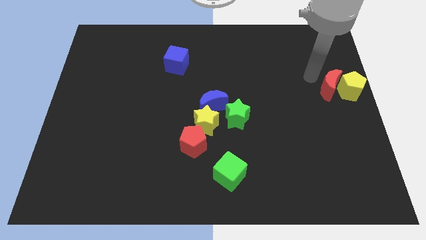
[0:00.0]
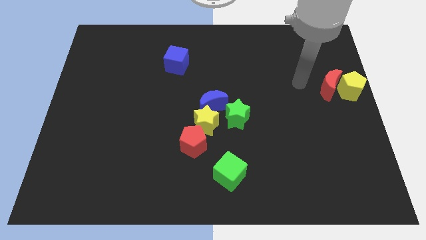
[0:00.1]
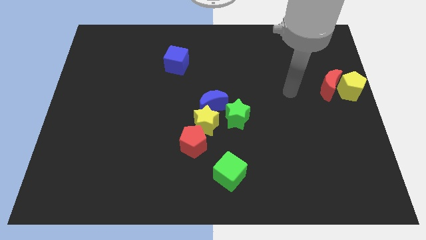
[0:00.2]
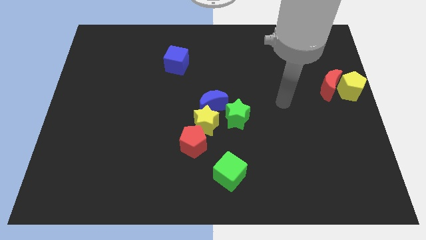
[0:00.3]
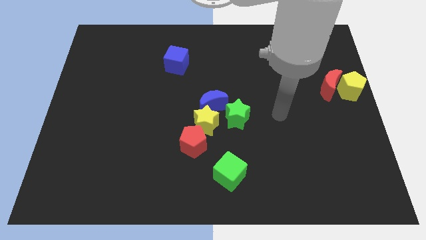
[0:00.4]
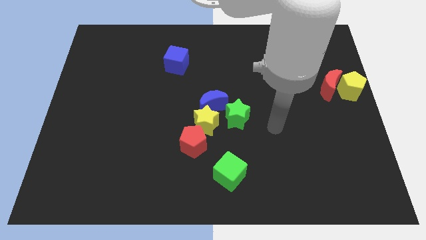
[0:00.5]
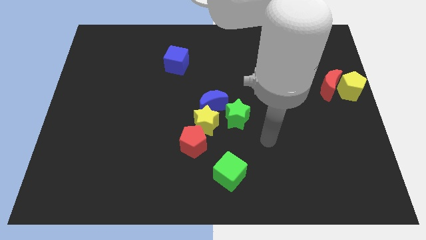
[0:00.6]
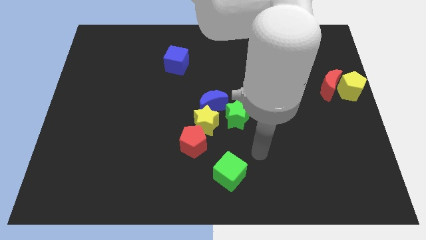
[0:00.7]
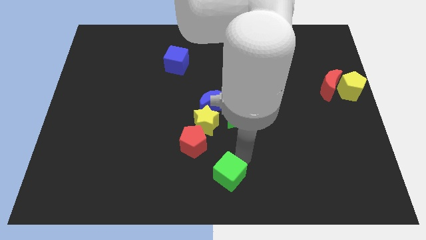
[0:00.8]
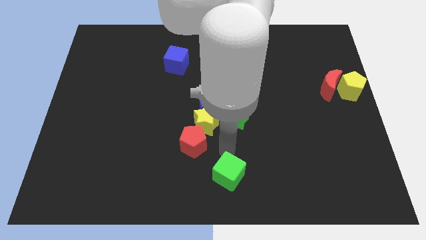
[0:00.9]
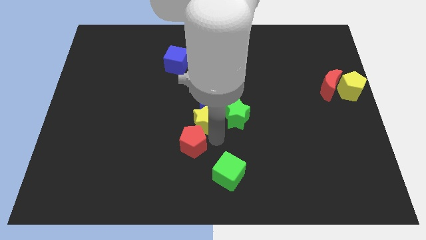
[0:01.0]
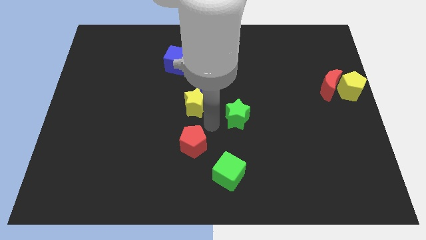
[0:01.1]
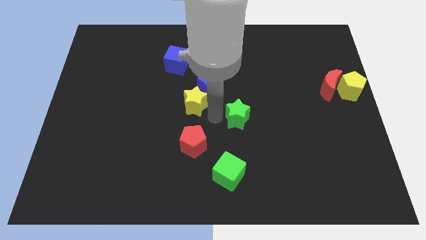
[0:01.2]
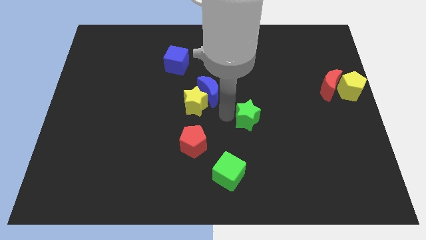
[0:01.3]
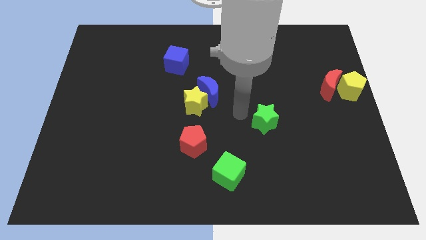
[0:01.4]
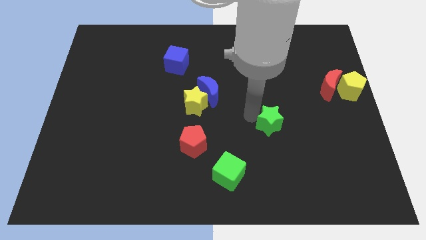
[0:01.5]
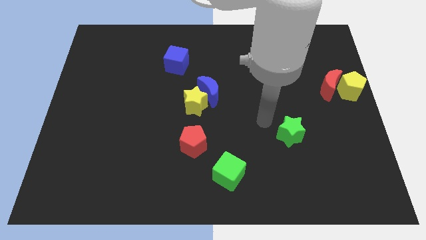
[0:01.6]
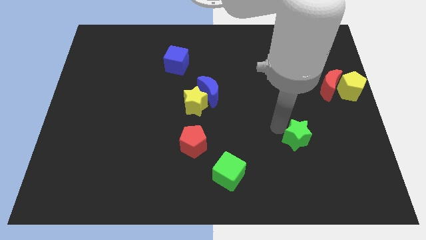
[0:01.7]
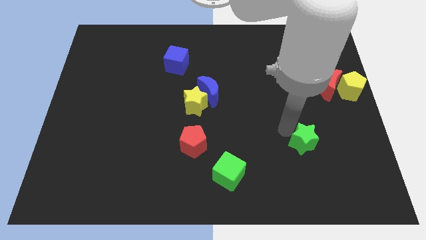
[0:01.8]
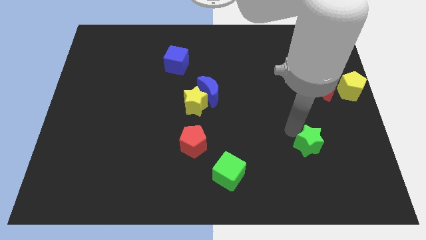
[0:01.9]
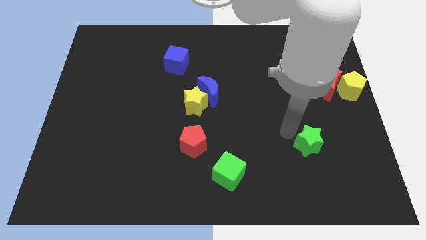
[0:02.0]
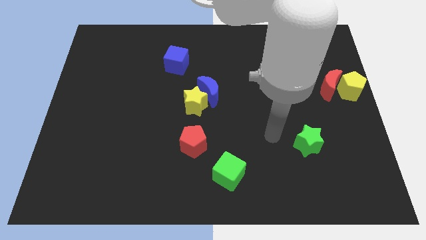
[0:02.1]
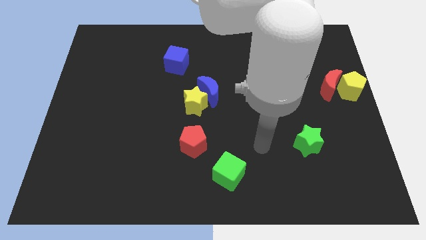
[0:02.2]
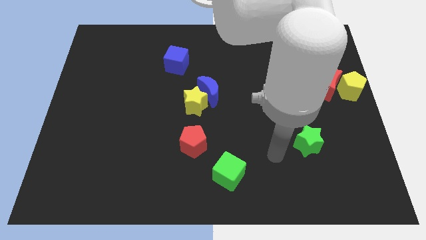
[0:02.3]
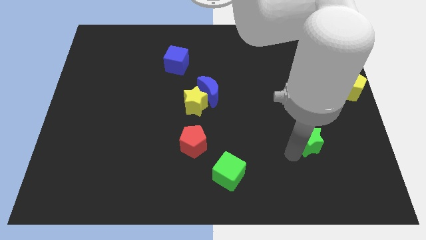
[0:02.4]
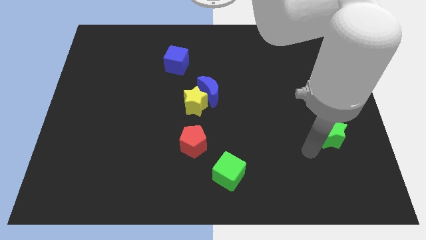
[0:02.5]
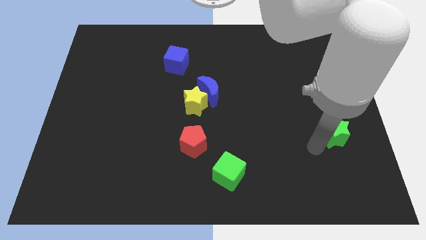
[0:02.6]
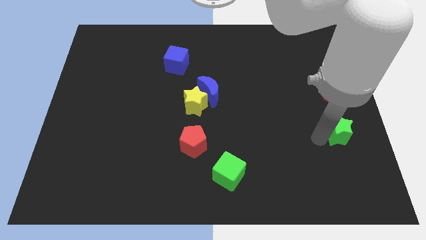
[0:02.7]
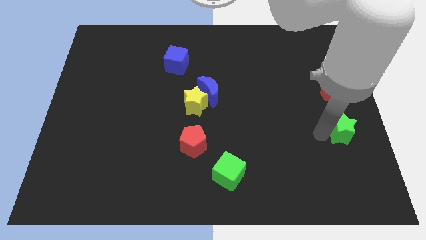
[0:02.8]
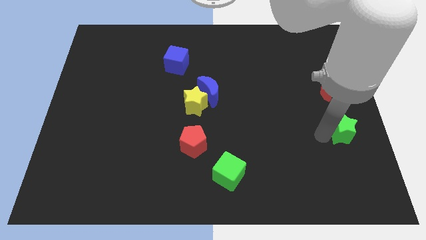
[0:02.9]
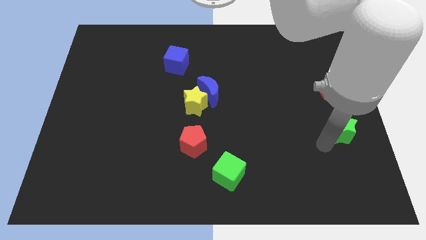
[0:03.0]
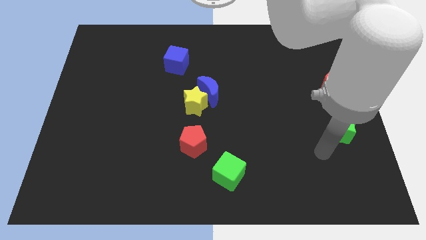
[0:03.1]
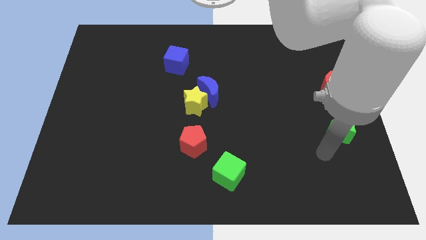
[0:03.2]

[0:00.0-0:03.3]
move the green star away from the blue crescent

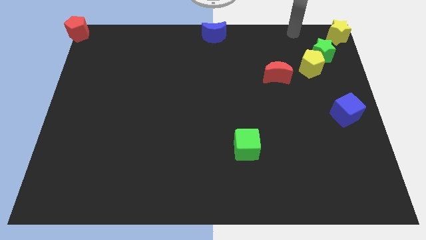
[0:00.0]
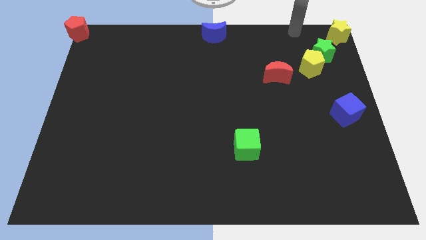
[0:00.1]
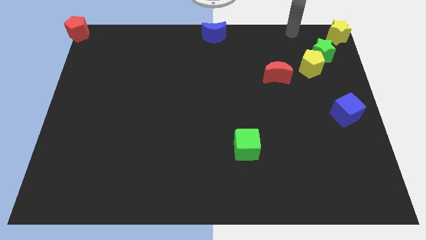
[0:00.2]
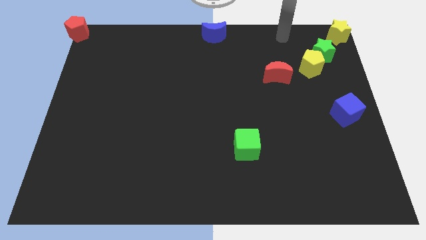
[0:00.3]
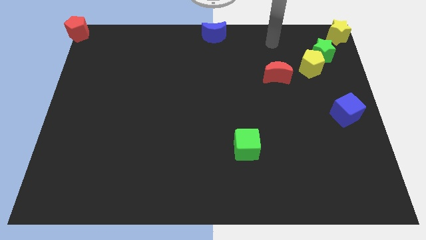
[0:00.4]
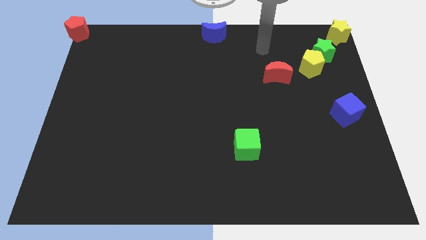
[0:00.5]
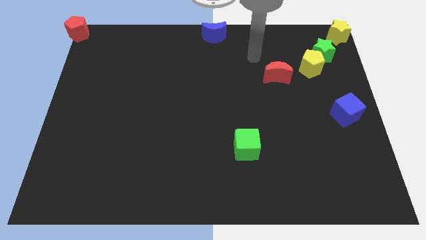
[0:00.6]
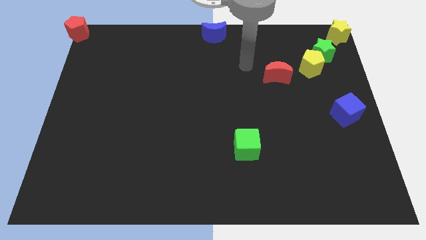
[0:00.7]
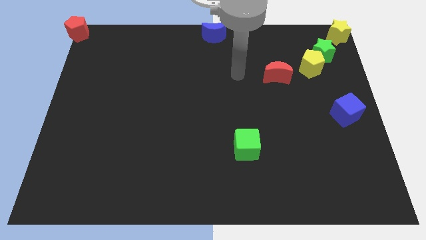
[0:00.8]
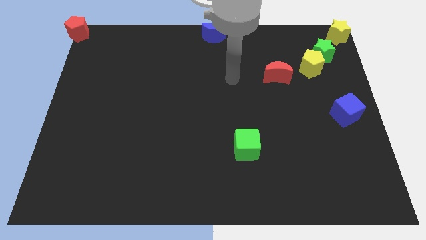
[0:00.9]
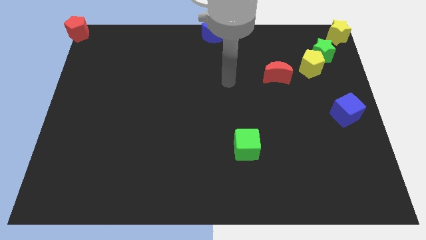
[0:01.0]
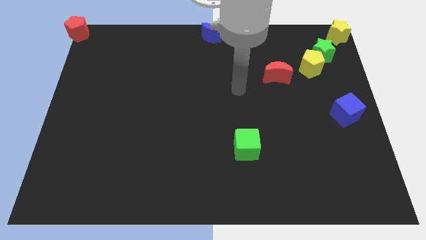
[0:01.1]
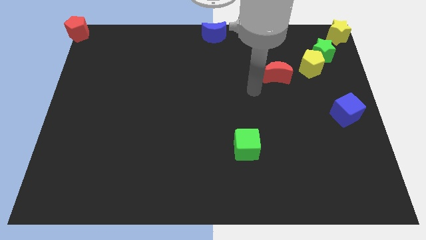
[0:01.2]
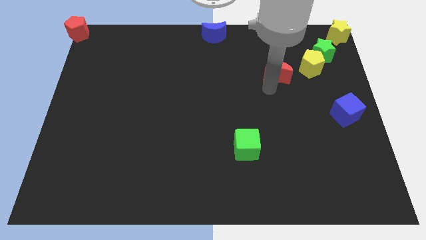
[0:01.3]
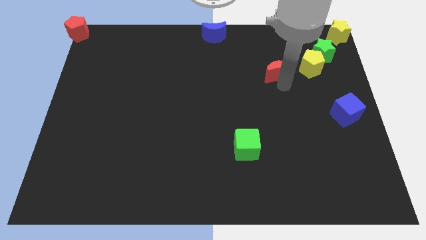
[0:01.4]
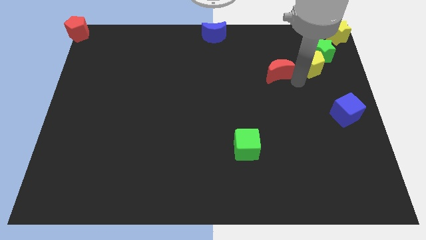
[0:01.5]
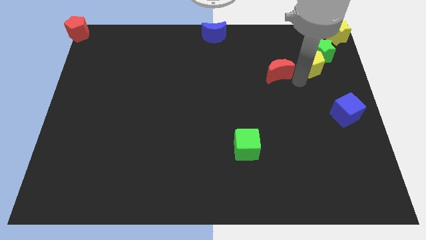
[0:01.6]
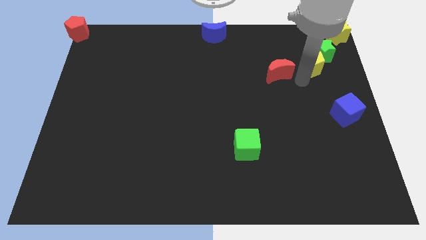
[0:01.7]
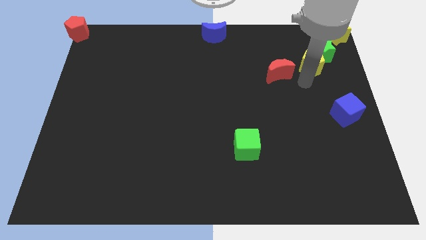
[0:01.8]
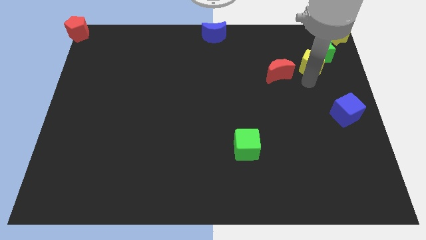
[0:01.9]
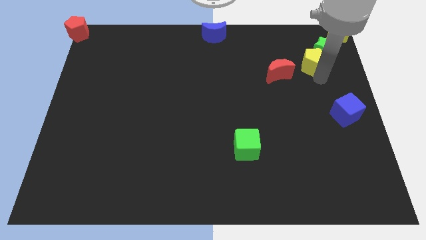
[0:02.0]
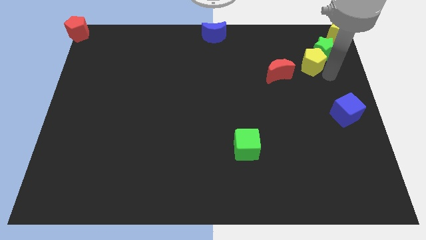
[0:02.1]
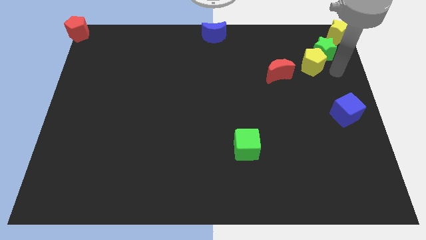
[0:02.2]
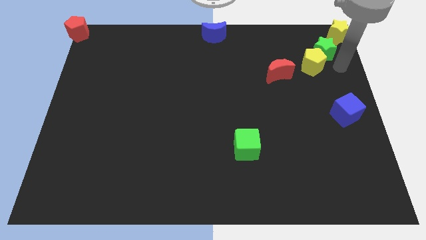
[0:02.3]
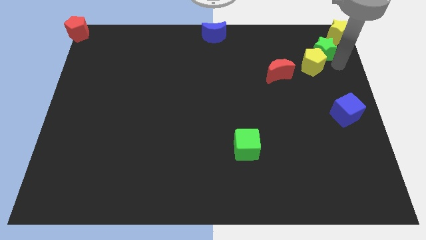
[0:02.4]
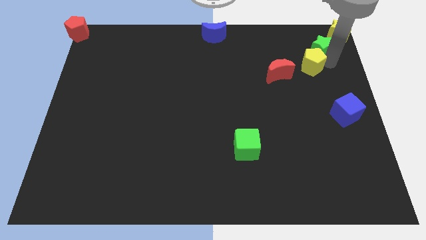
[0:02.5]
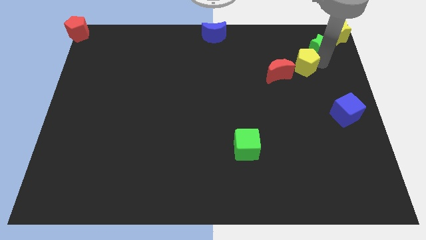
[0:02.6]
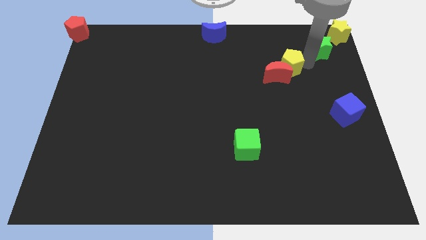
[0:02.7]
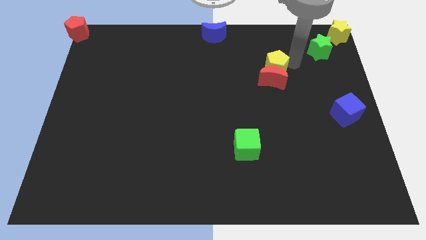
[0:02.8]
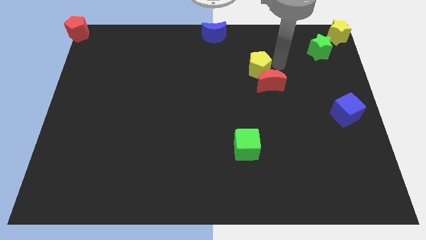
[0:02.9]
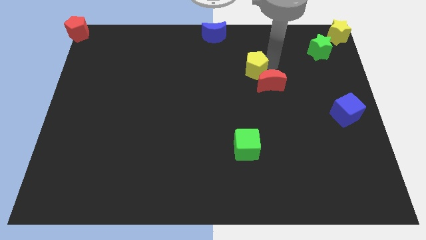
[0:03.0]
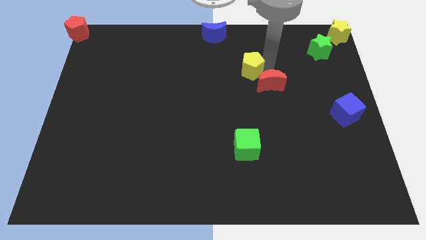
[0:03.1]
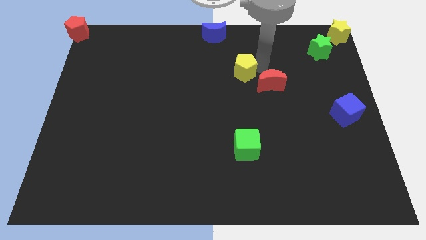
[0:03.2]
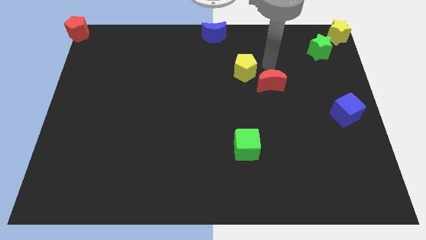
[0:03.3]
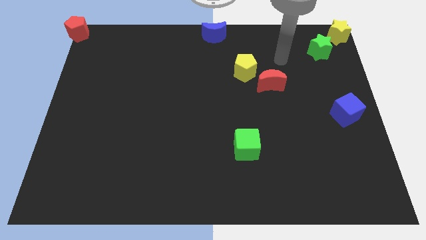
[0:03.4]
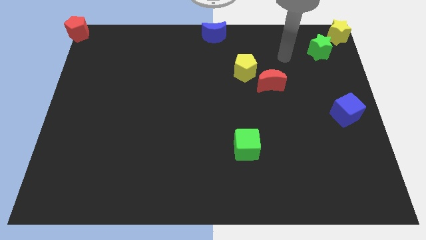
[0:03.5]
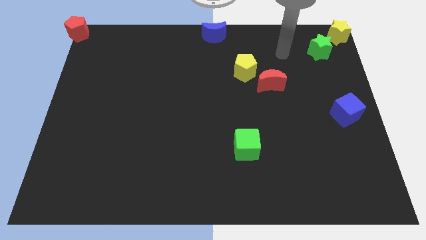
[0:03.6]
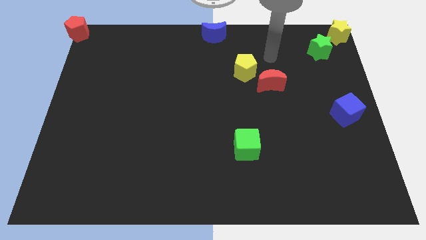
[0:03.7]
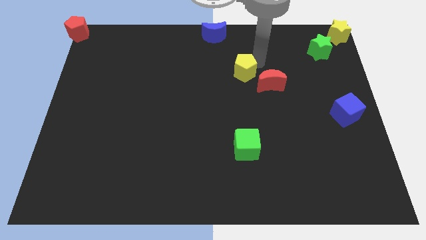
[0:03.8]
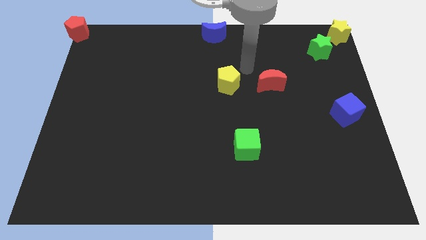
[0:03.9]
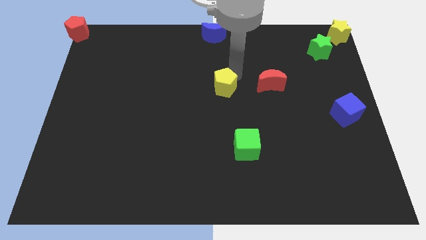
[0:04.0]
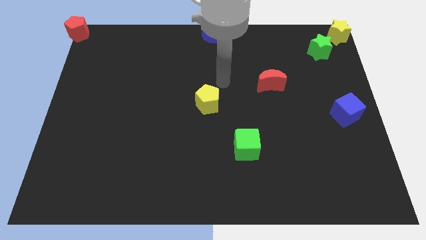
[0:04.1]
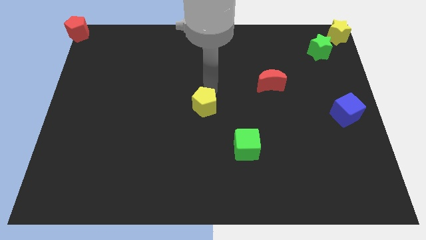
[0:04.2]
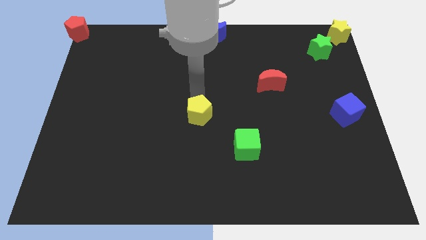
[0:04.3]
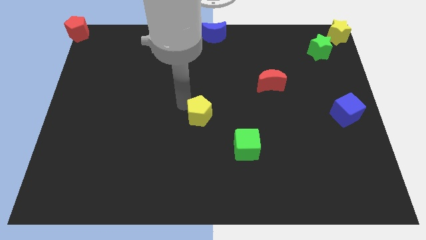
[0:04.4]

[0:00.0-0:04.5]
move yellow pentagon to the middle of the board

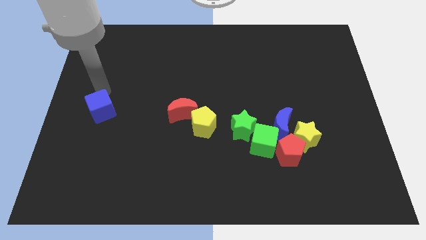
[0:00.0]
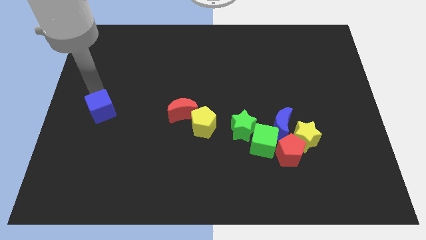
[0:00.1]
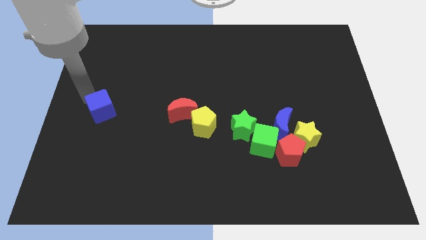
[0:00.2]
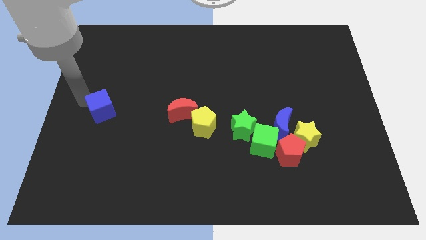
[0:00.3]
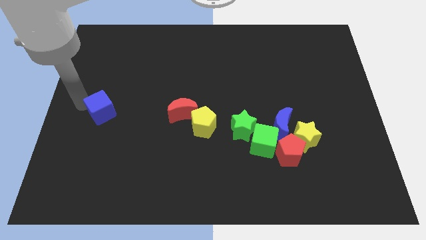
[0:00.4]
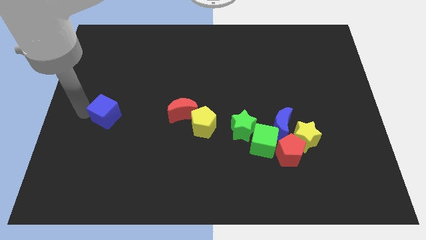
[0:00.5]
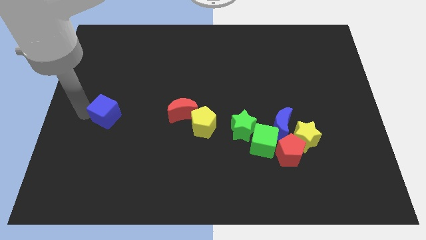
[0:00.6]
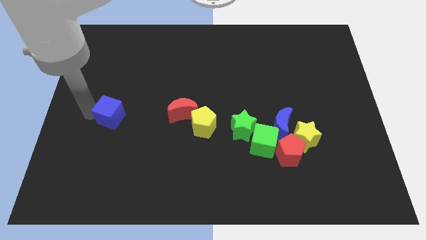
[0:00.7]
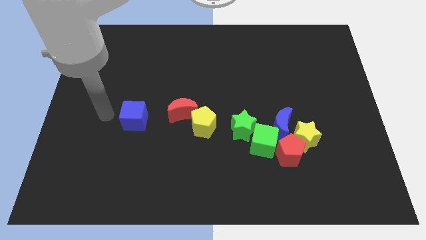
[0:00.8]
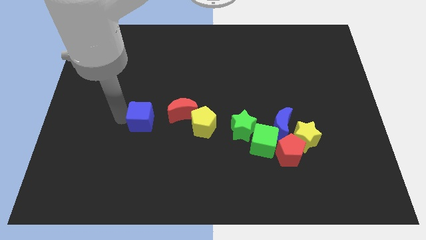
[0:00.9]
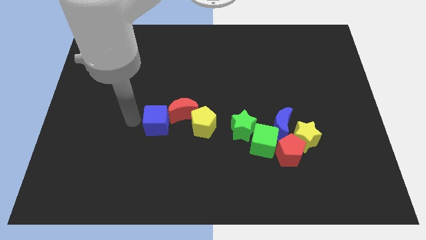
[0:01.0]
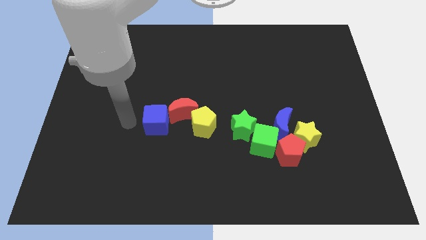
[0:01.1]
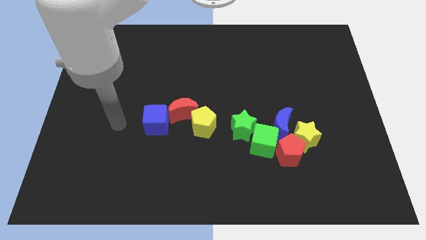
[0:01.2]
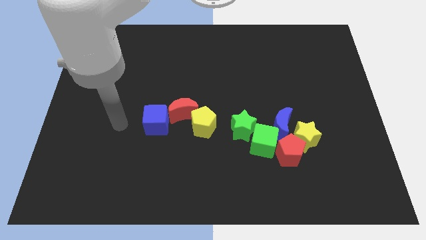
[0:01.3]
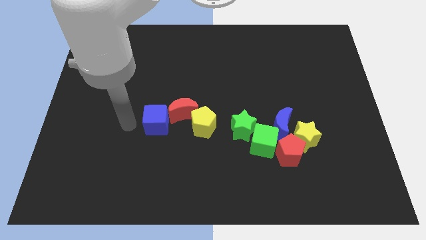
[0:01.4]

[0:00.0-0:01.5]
push the blue cube into the red moon
